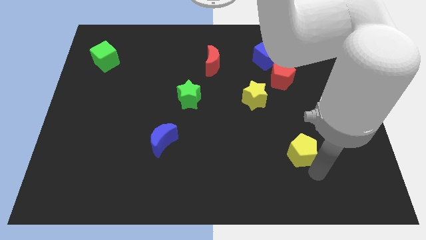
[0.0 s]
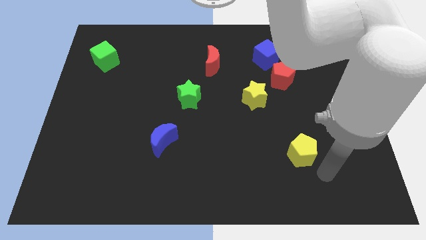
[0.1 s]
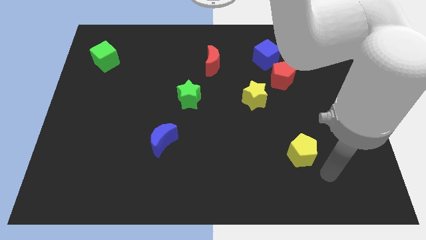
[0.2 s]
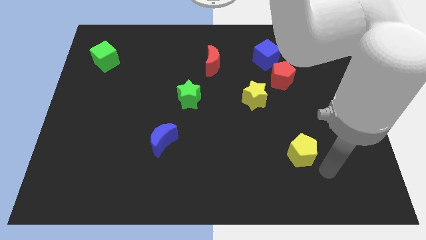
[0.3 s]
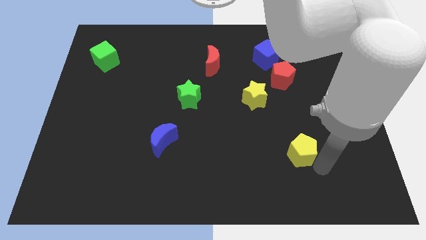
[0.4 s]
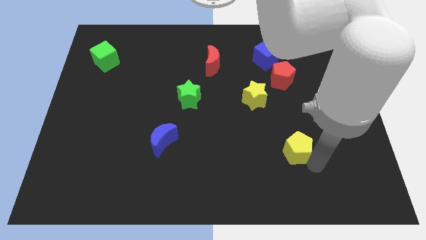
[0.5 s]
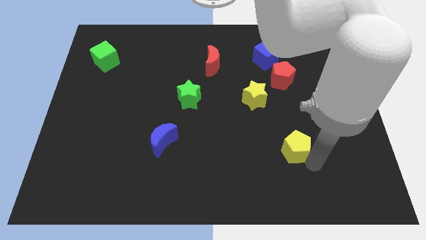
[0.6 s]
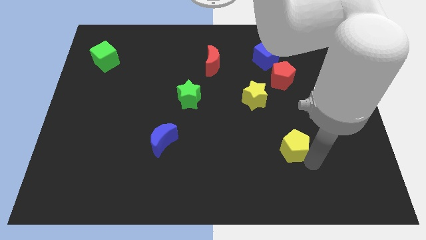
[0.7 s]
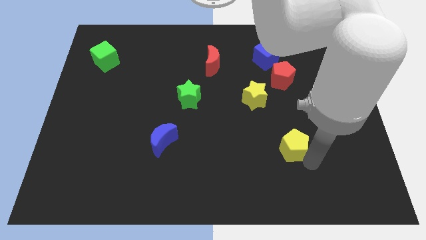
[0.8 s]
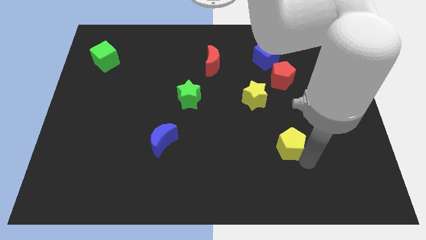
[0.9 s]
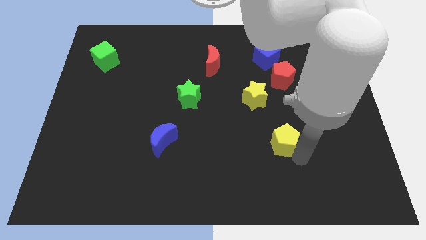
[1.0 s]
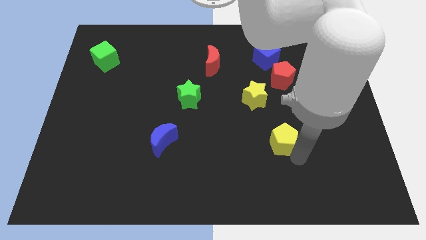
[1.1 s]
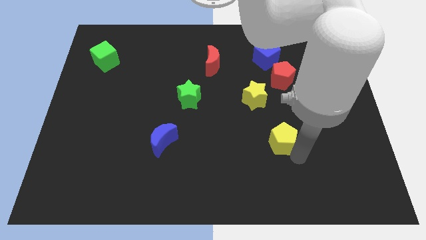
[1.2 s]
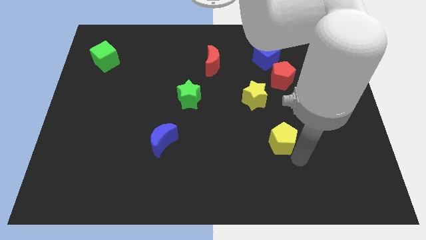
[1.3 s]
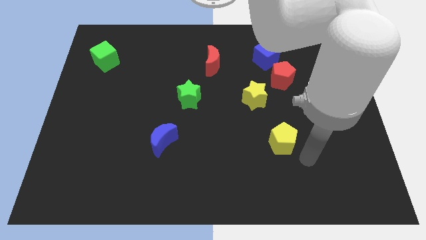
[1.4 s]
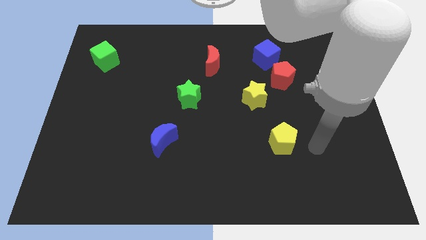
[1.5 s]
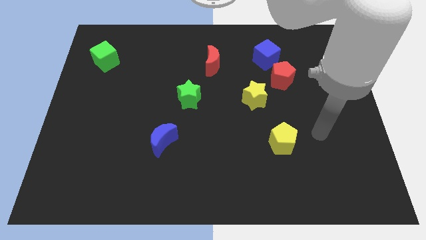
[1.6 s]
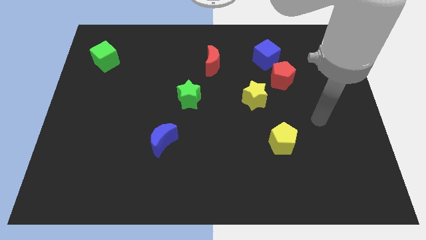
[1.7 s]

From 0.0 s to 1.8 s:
push the yellow pentagon slightly towards the yellow star

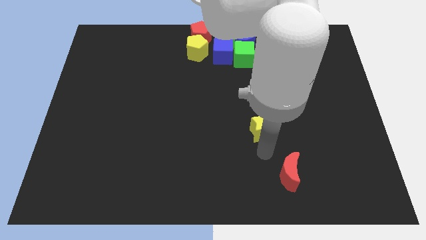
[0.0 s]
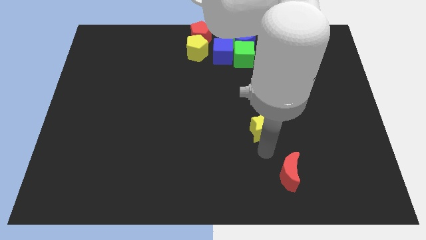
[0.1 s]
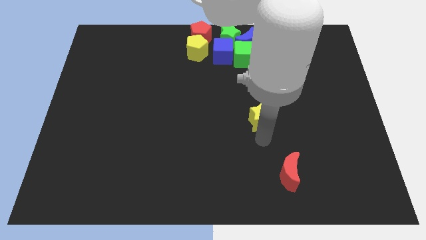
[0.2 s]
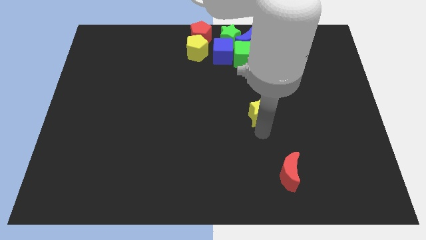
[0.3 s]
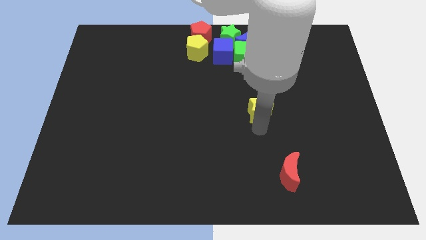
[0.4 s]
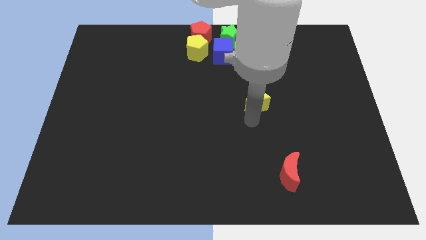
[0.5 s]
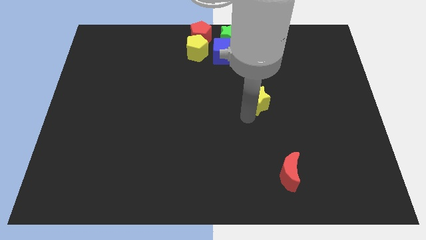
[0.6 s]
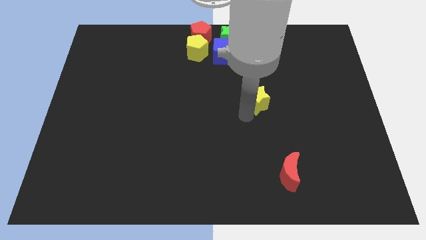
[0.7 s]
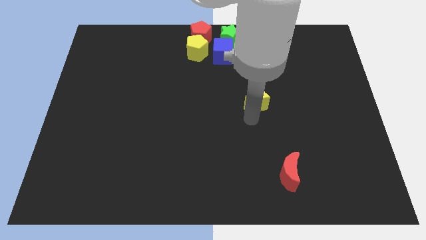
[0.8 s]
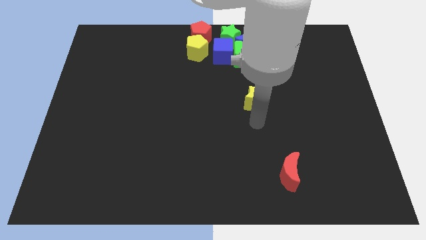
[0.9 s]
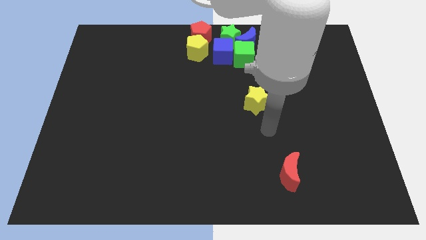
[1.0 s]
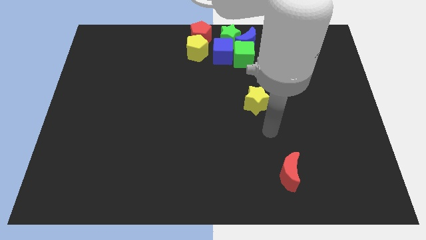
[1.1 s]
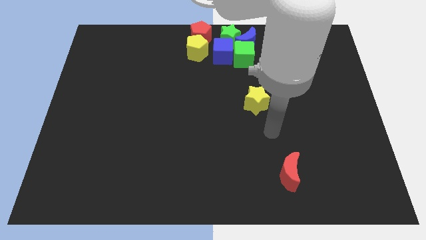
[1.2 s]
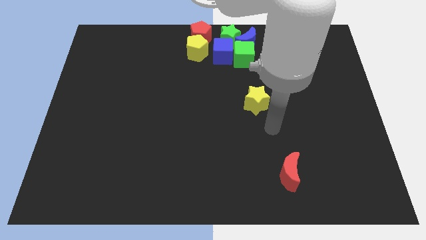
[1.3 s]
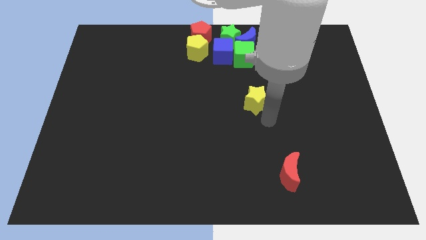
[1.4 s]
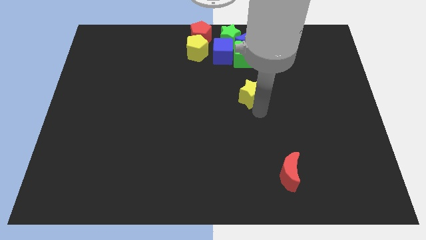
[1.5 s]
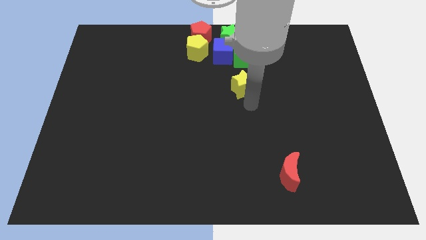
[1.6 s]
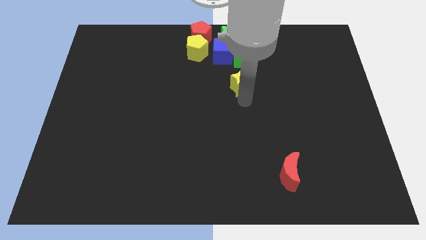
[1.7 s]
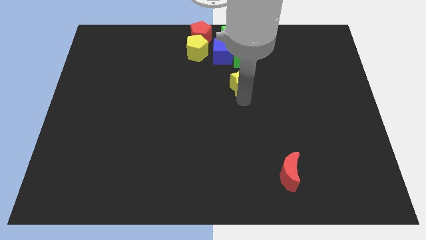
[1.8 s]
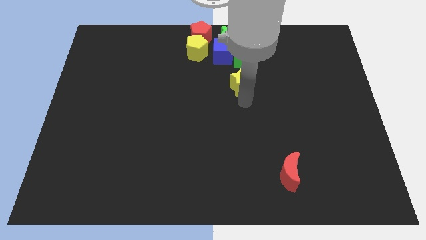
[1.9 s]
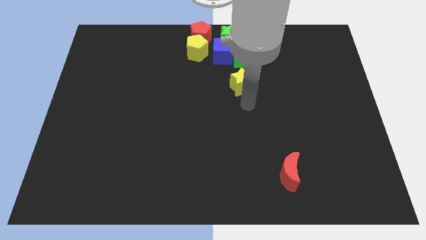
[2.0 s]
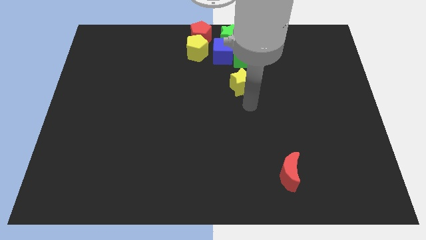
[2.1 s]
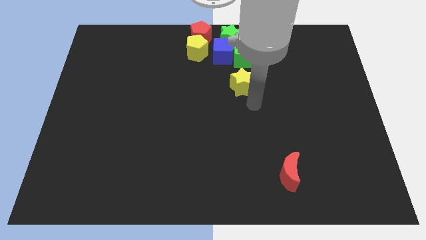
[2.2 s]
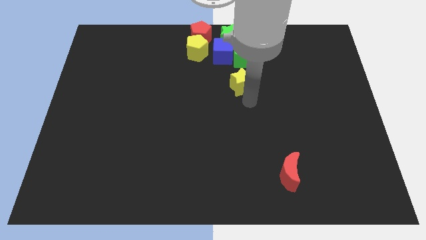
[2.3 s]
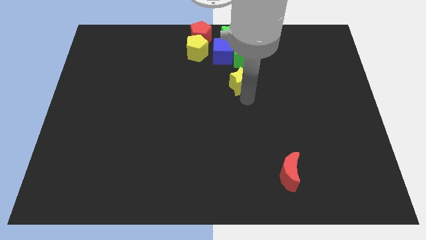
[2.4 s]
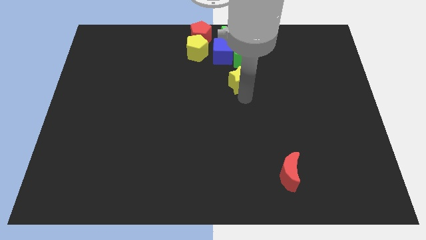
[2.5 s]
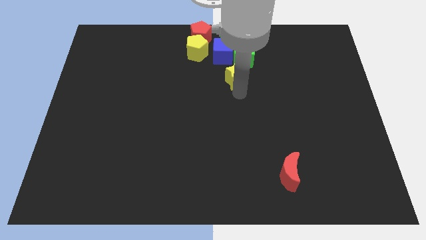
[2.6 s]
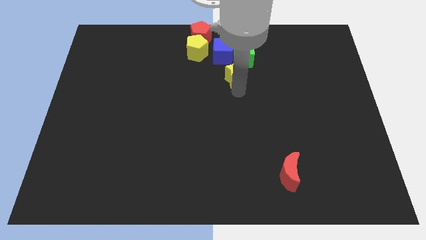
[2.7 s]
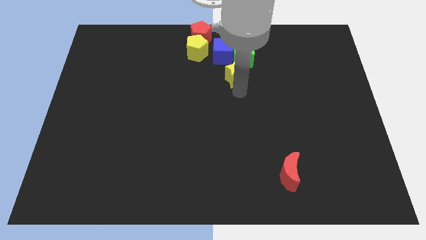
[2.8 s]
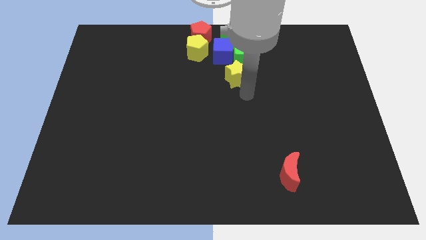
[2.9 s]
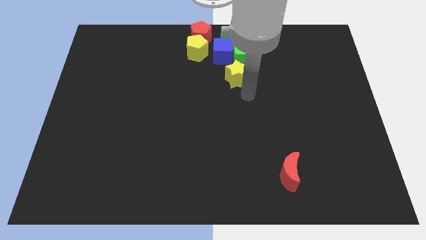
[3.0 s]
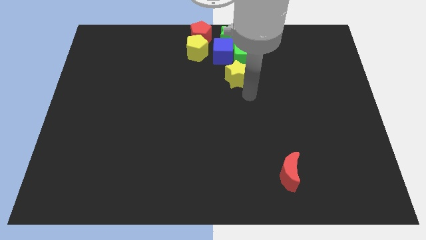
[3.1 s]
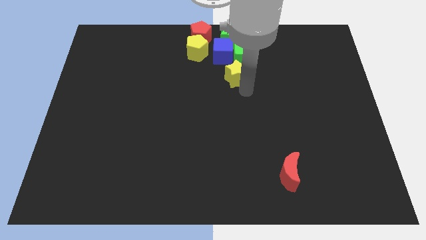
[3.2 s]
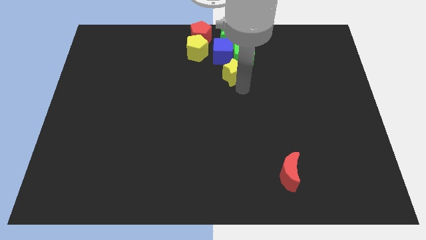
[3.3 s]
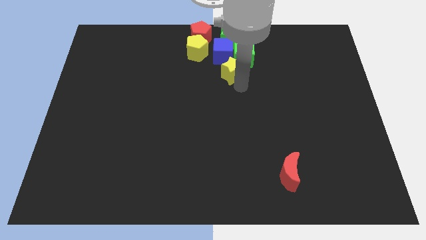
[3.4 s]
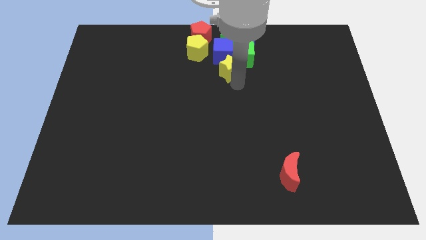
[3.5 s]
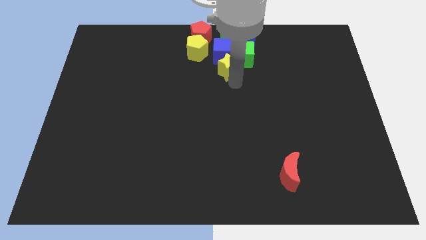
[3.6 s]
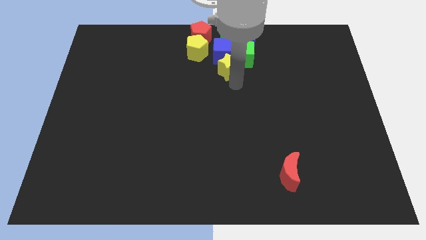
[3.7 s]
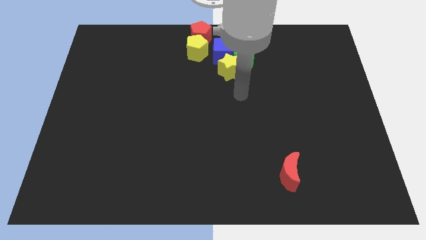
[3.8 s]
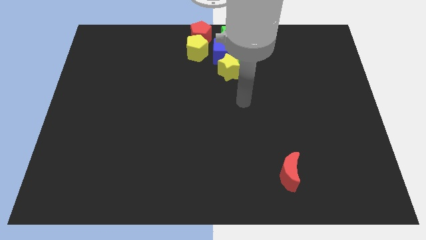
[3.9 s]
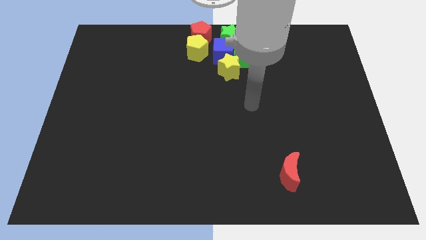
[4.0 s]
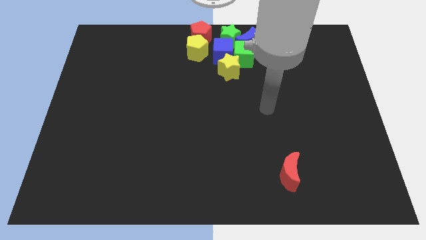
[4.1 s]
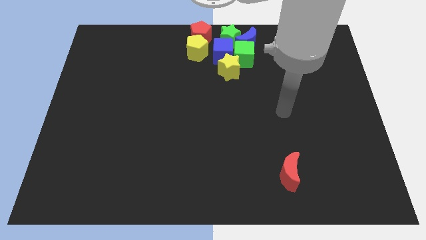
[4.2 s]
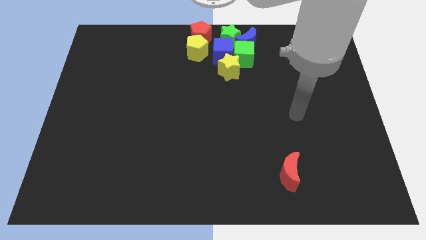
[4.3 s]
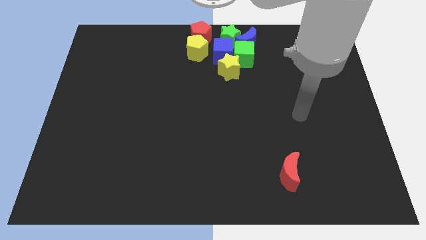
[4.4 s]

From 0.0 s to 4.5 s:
move the yellow star to the bottom right of the blue cube

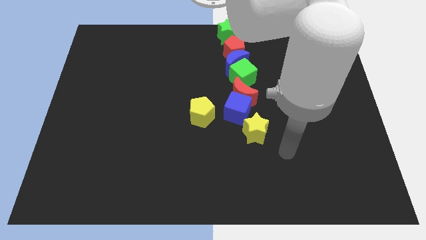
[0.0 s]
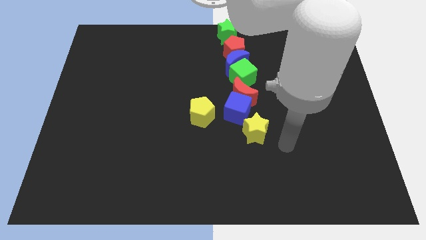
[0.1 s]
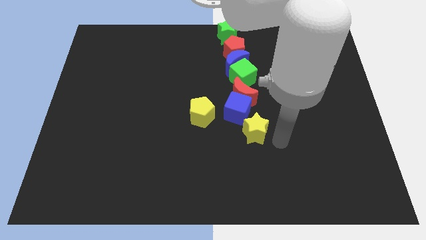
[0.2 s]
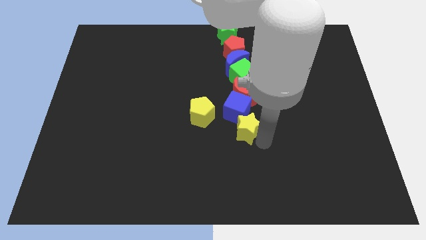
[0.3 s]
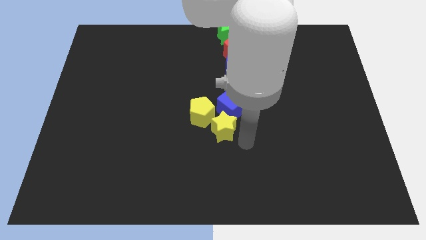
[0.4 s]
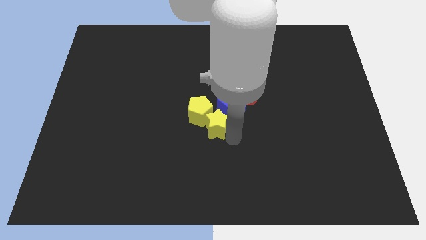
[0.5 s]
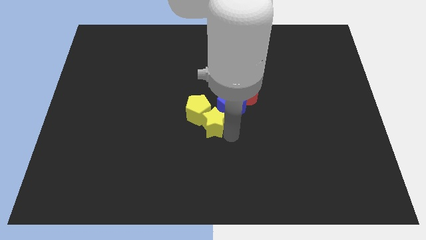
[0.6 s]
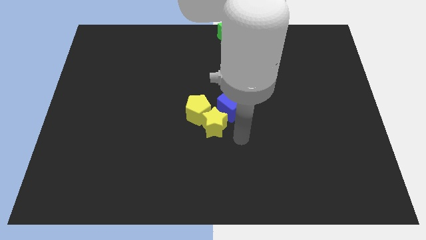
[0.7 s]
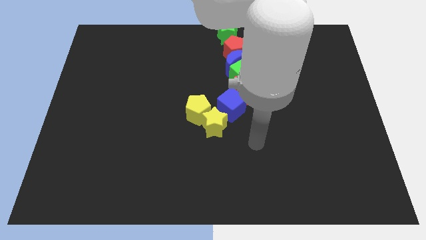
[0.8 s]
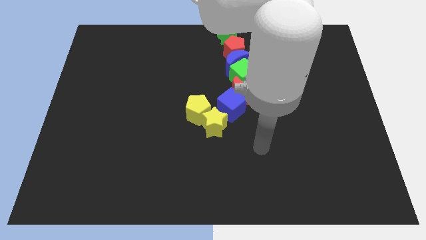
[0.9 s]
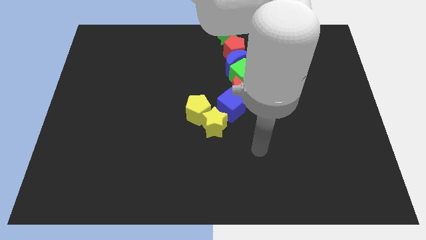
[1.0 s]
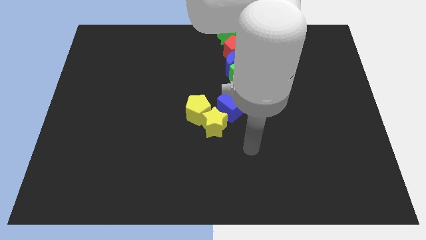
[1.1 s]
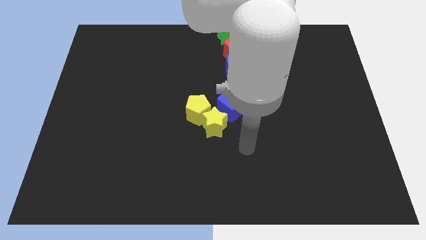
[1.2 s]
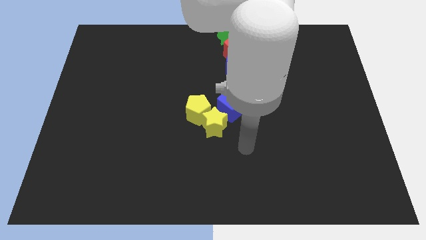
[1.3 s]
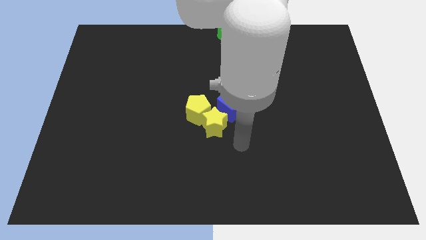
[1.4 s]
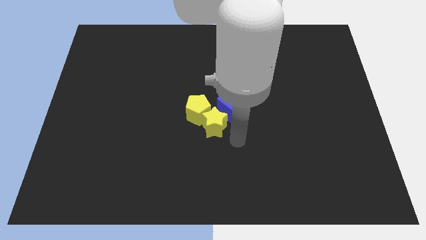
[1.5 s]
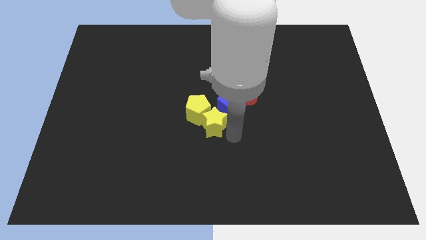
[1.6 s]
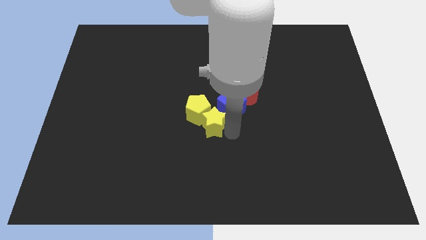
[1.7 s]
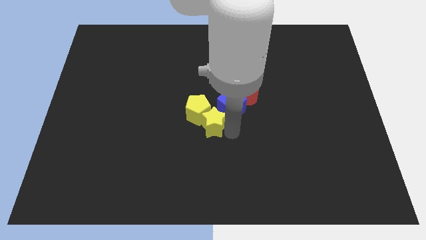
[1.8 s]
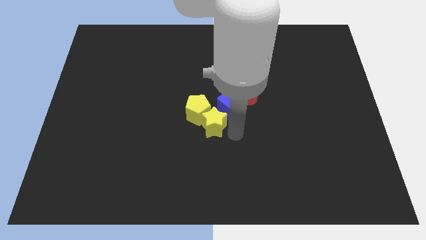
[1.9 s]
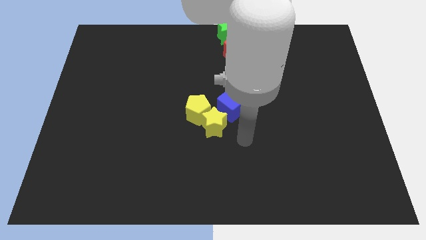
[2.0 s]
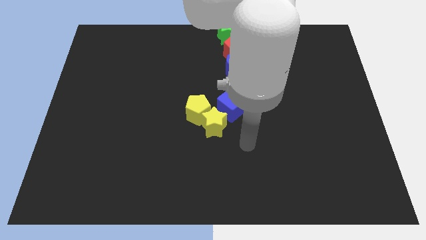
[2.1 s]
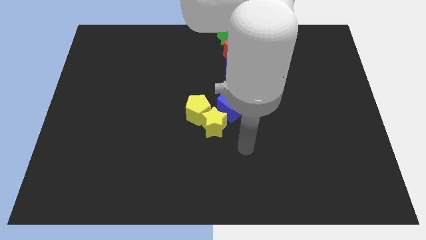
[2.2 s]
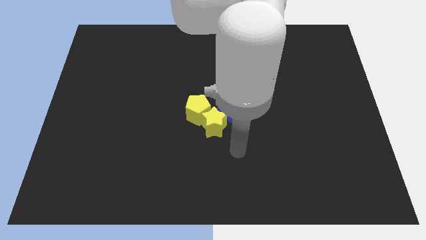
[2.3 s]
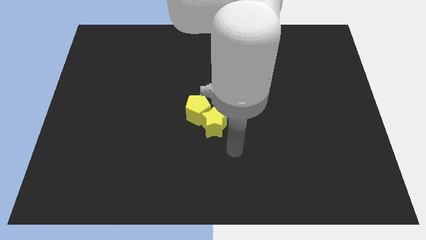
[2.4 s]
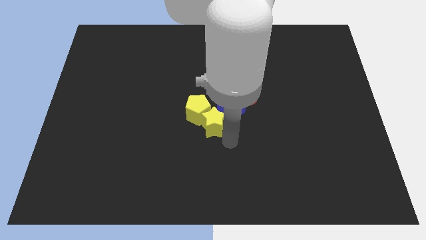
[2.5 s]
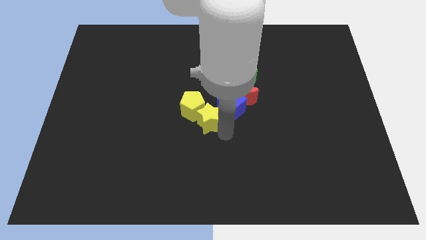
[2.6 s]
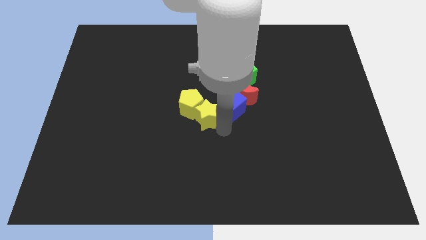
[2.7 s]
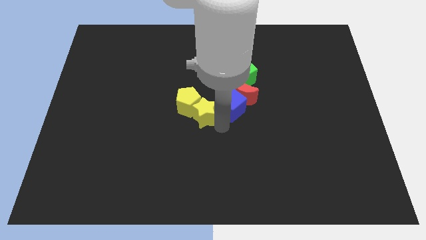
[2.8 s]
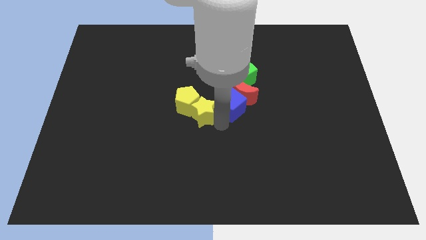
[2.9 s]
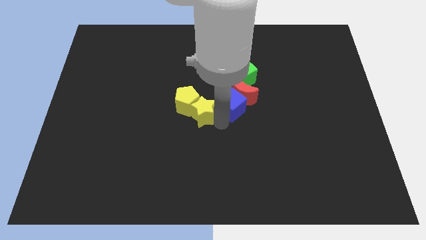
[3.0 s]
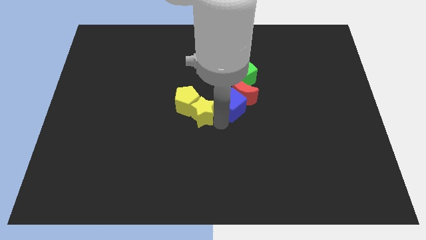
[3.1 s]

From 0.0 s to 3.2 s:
push the yellow star into the yellow pentagon
